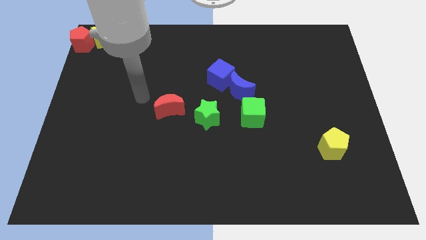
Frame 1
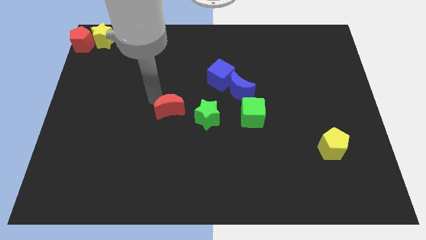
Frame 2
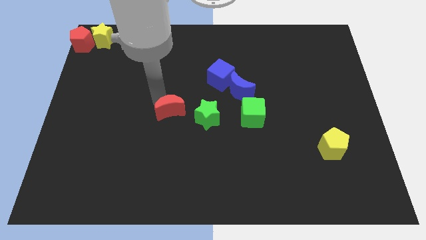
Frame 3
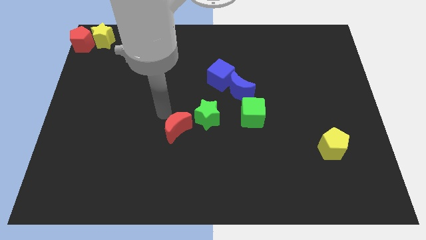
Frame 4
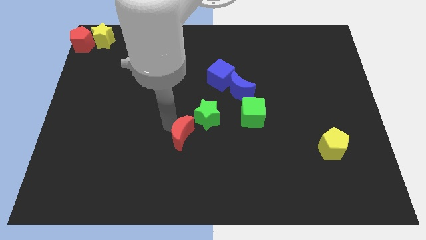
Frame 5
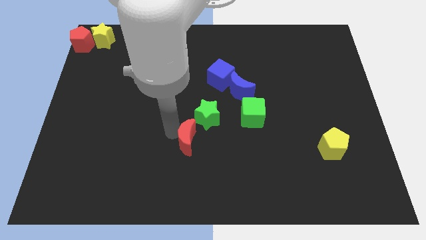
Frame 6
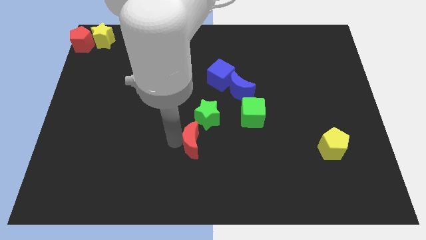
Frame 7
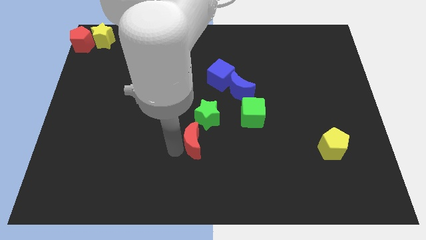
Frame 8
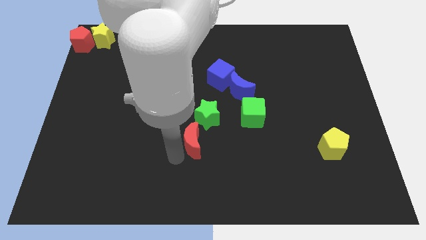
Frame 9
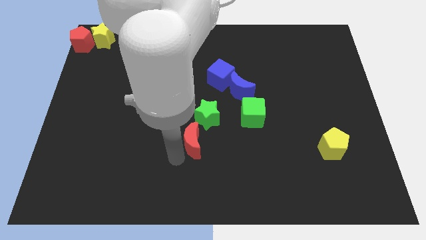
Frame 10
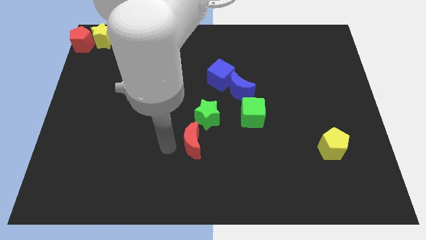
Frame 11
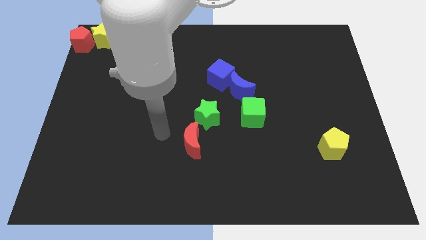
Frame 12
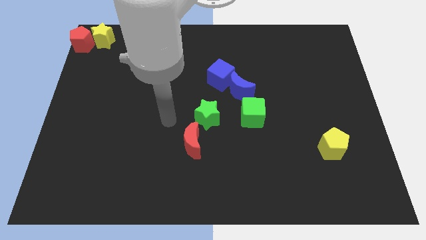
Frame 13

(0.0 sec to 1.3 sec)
place the red moon below the green star

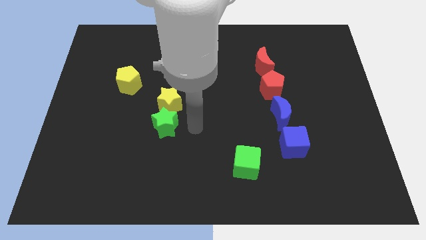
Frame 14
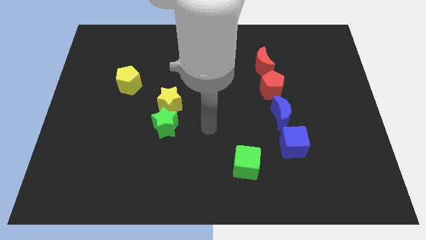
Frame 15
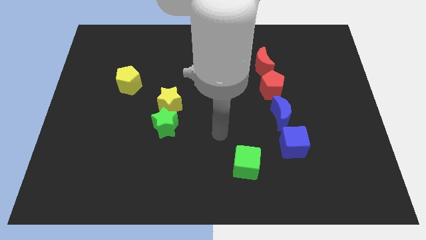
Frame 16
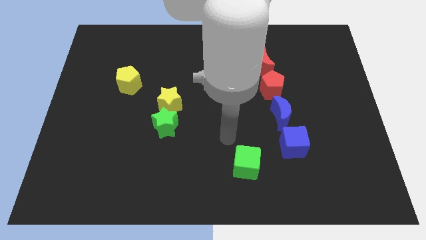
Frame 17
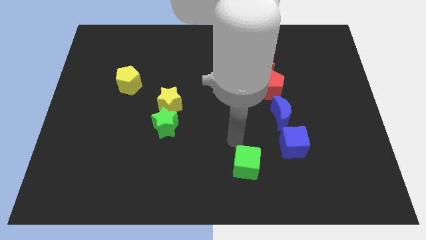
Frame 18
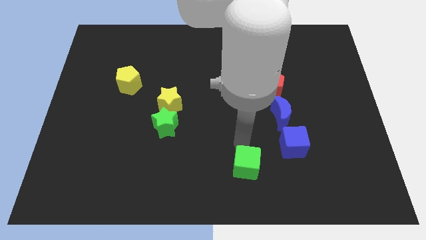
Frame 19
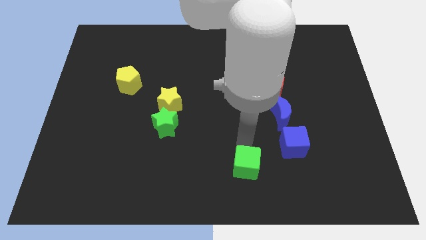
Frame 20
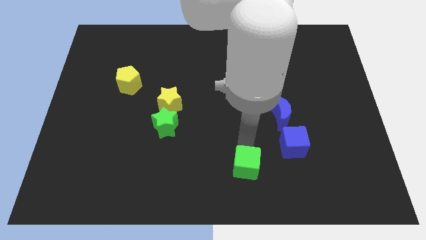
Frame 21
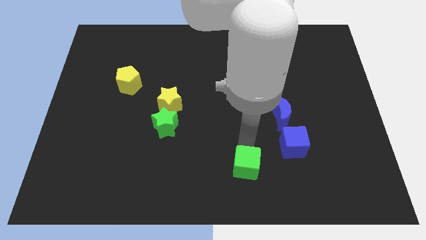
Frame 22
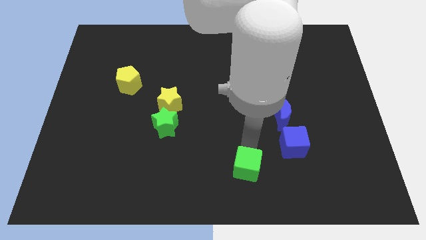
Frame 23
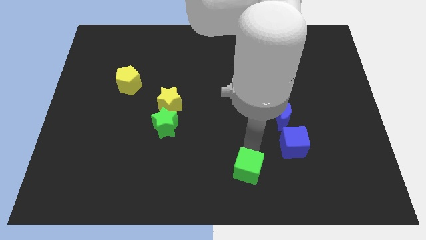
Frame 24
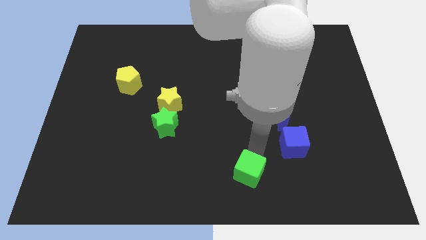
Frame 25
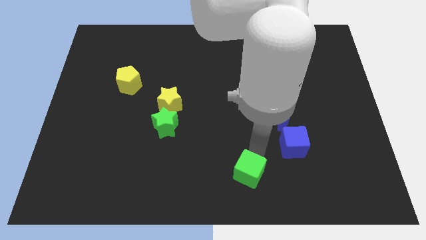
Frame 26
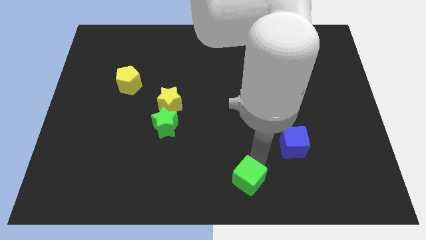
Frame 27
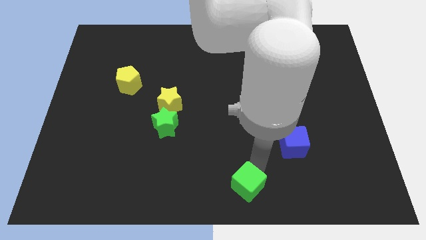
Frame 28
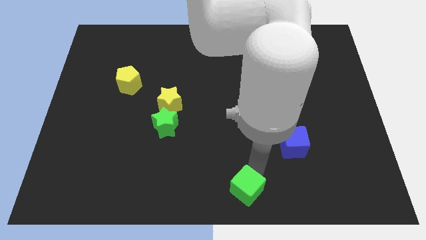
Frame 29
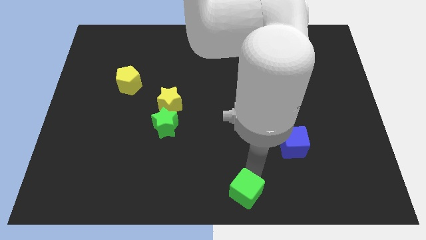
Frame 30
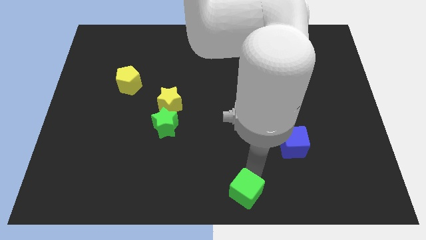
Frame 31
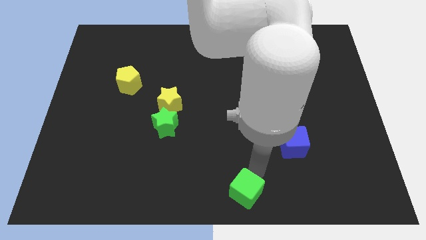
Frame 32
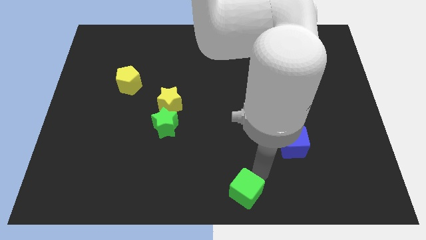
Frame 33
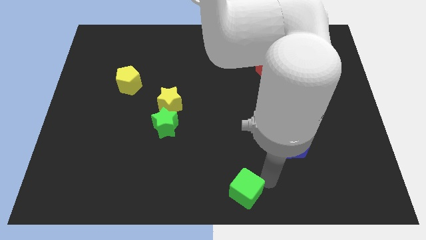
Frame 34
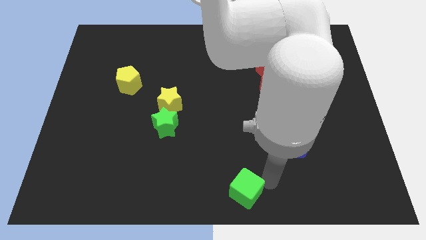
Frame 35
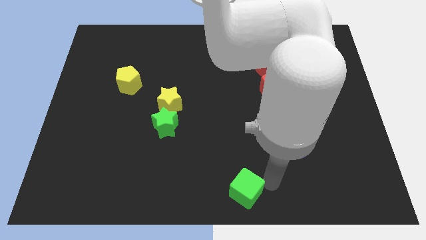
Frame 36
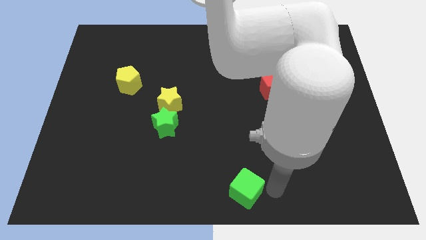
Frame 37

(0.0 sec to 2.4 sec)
slide the green cube towards the bottom center

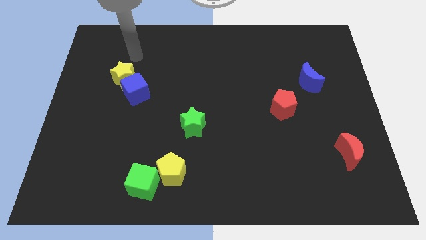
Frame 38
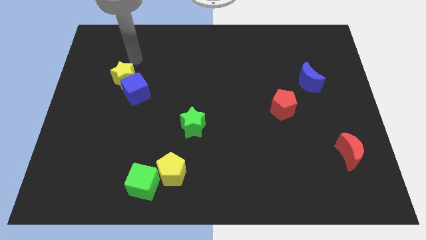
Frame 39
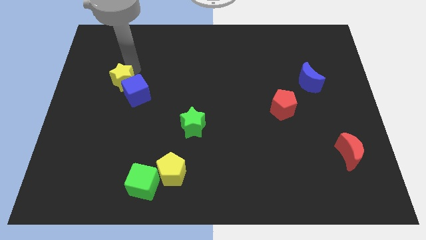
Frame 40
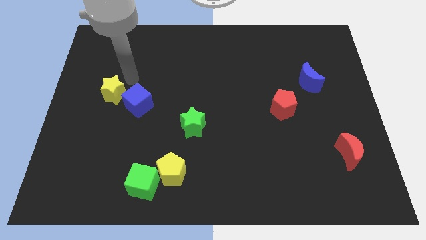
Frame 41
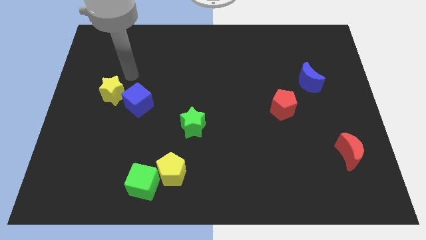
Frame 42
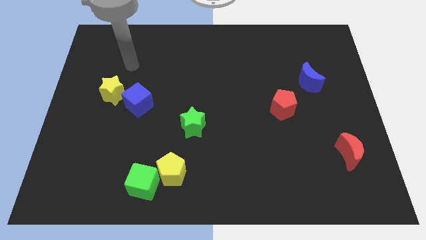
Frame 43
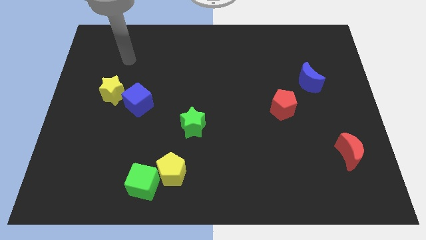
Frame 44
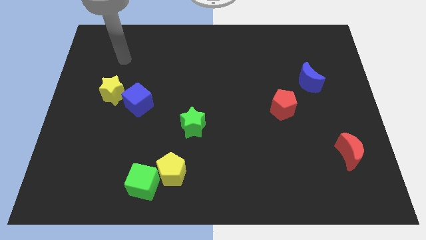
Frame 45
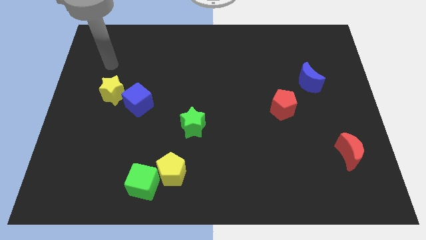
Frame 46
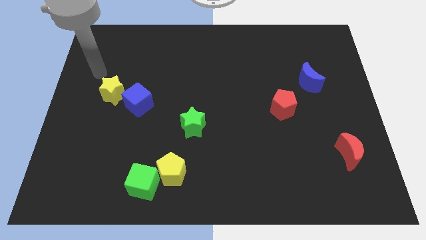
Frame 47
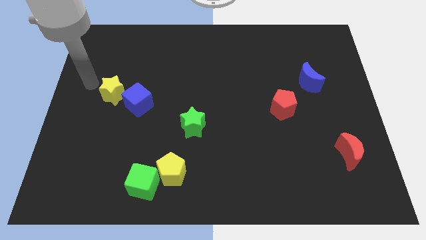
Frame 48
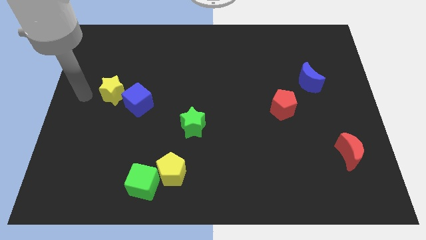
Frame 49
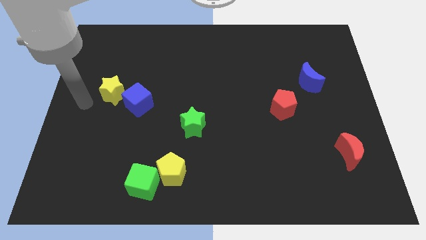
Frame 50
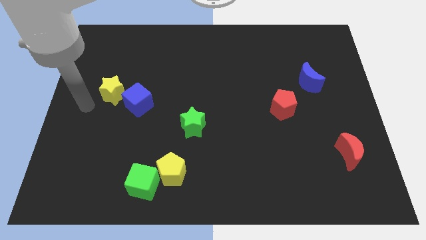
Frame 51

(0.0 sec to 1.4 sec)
push yellow star to the left of the blue cube

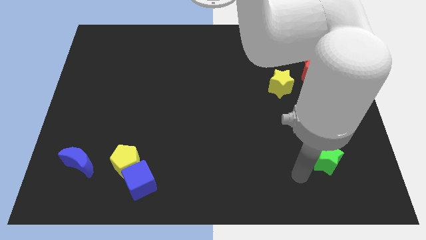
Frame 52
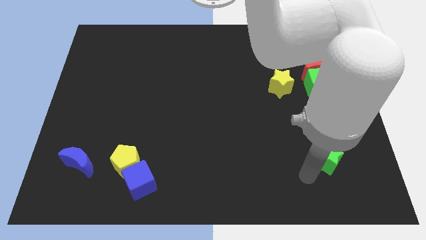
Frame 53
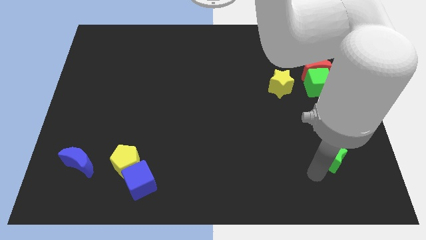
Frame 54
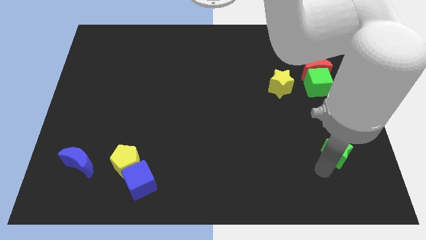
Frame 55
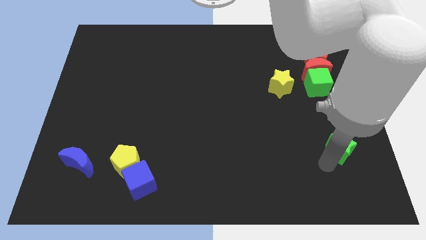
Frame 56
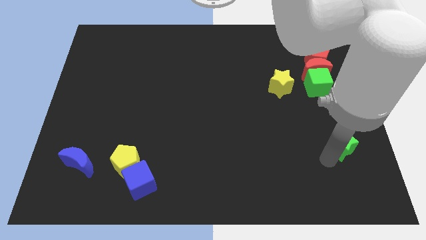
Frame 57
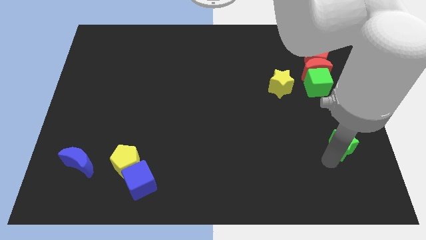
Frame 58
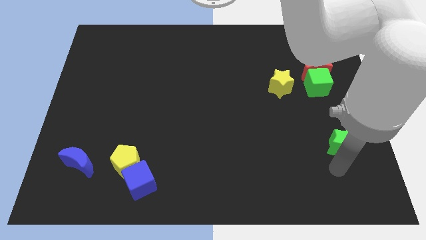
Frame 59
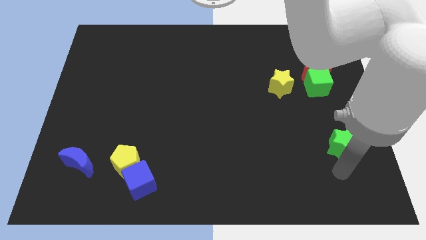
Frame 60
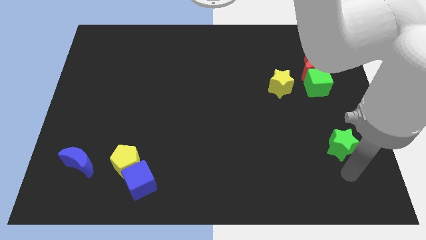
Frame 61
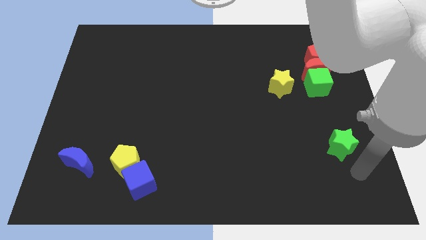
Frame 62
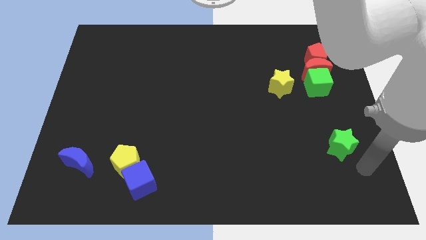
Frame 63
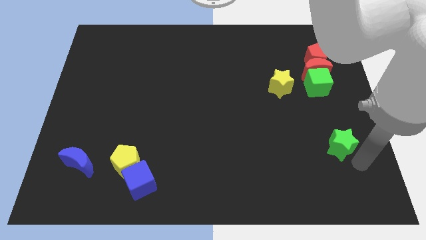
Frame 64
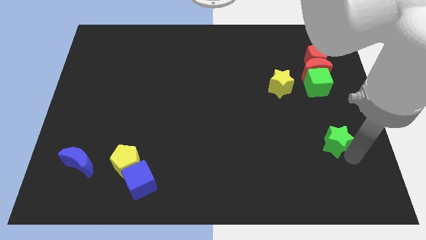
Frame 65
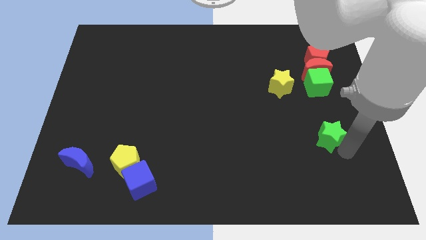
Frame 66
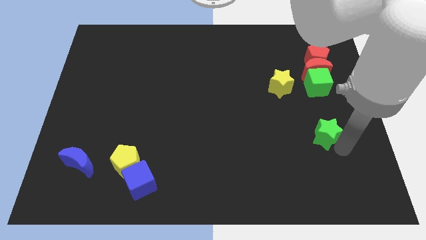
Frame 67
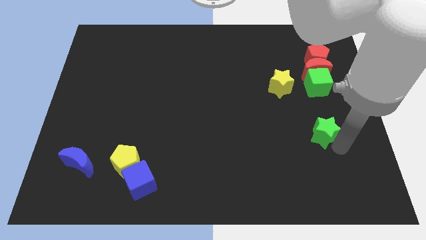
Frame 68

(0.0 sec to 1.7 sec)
place the green star below the green cube

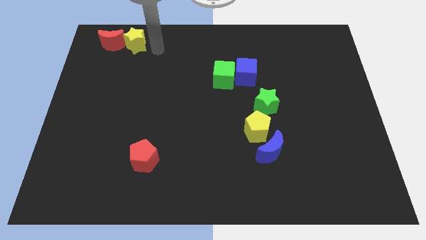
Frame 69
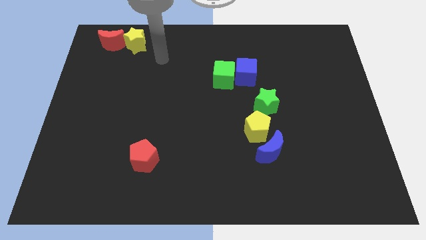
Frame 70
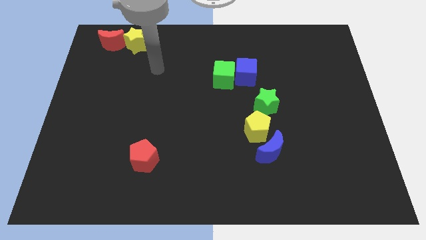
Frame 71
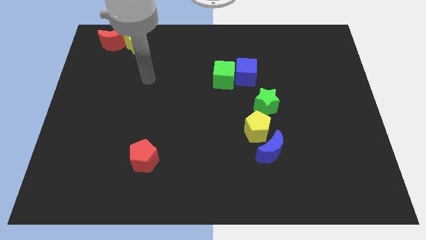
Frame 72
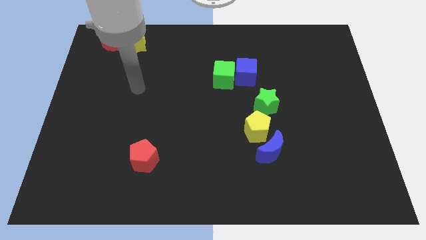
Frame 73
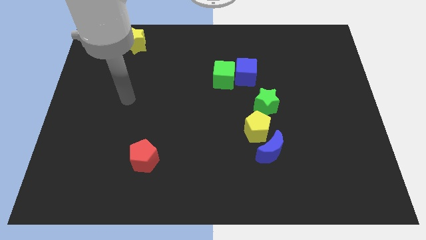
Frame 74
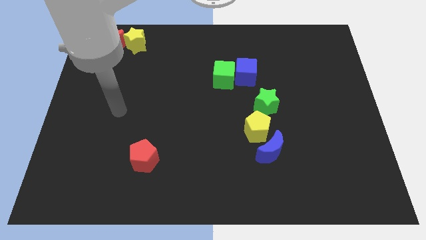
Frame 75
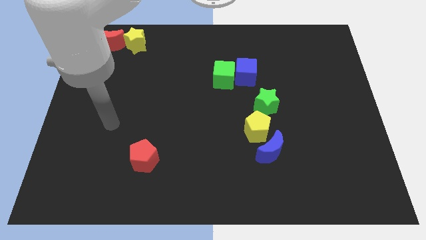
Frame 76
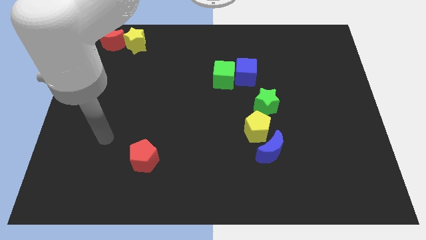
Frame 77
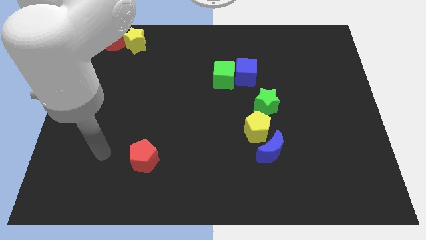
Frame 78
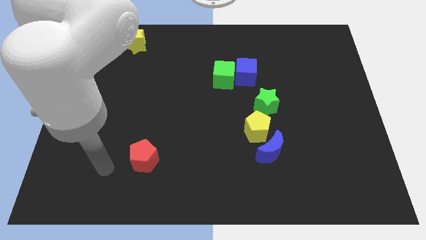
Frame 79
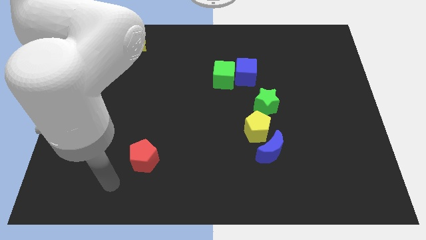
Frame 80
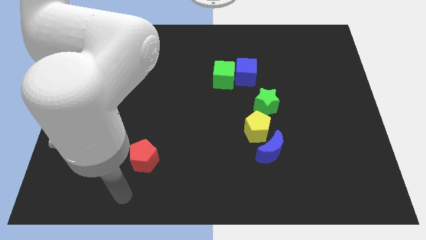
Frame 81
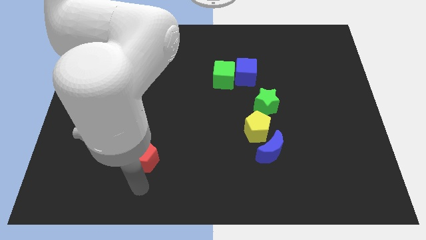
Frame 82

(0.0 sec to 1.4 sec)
move your arm to the bottom of the red pentagon

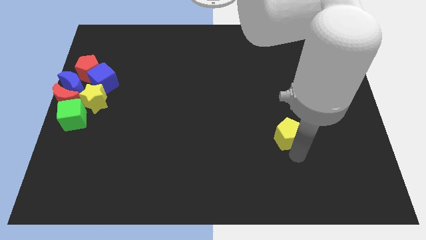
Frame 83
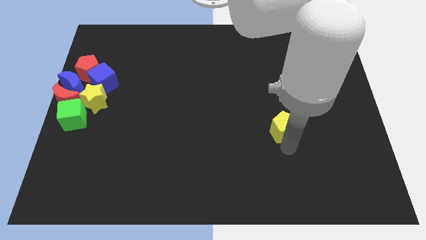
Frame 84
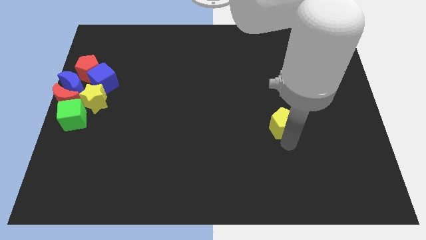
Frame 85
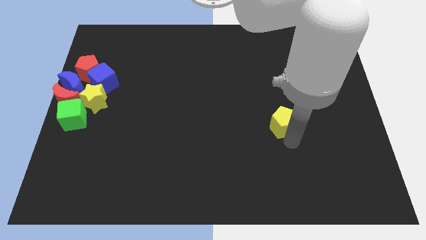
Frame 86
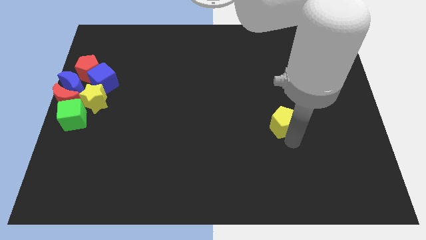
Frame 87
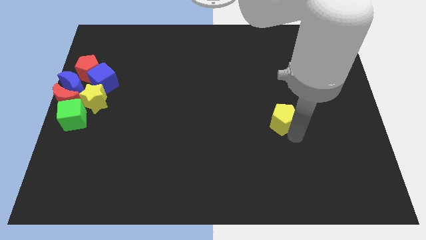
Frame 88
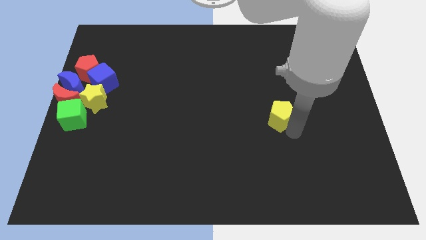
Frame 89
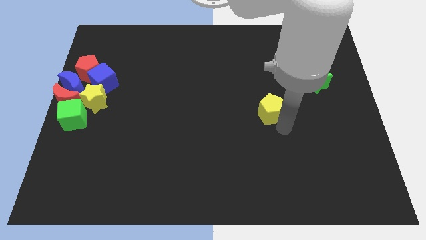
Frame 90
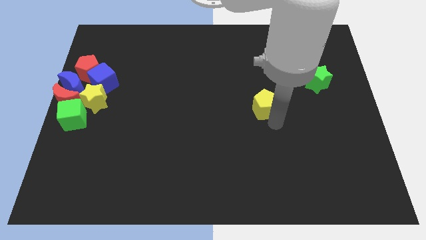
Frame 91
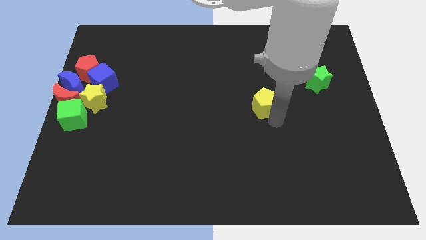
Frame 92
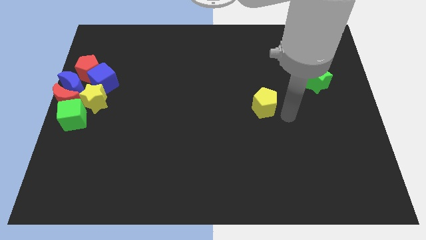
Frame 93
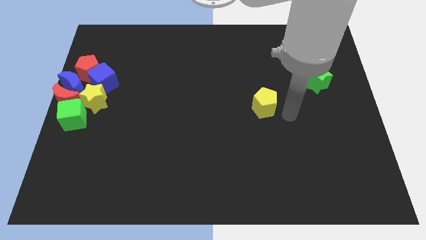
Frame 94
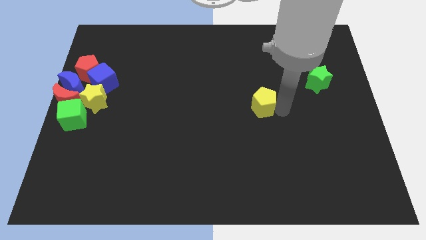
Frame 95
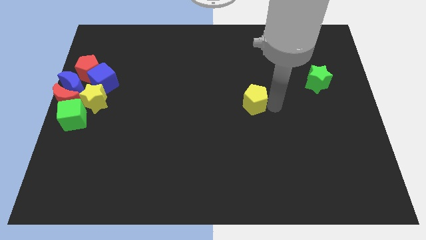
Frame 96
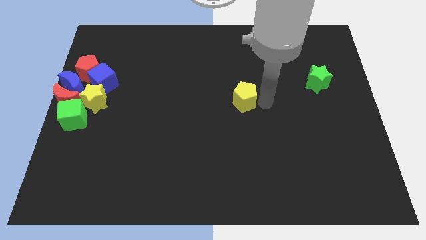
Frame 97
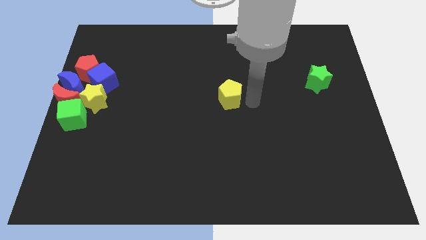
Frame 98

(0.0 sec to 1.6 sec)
push the yellow pentagon towards the top center
